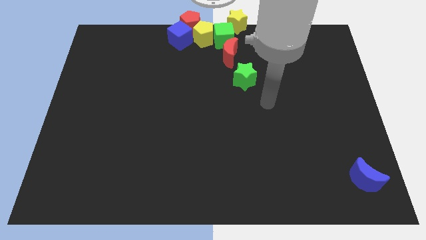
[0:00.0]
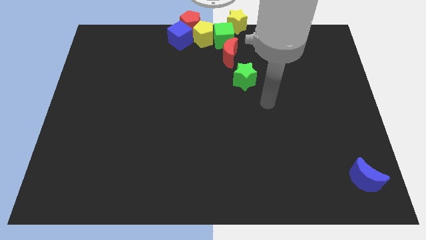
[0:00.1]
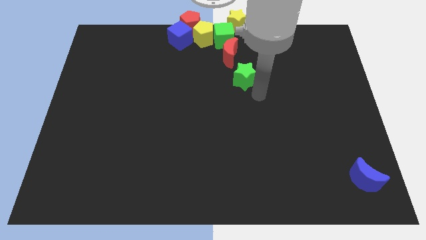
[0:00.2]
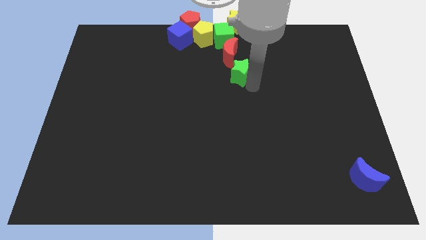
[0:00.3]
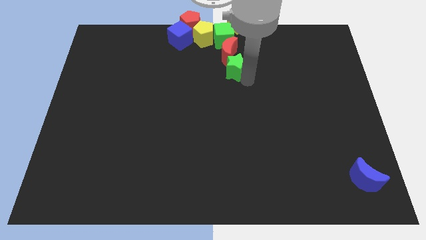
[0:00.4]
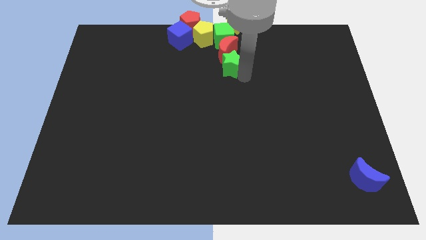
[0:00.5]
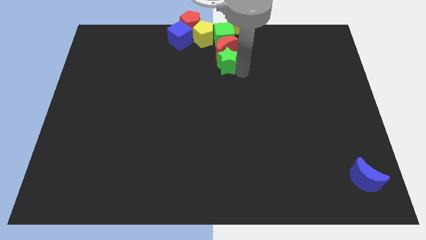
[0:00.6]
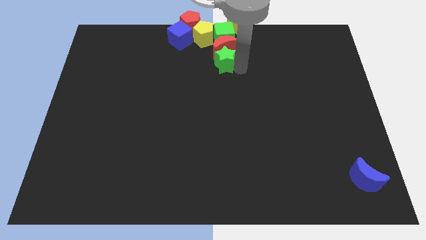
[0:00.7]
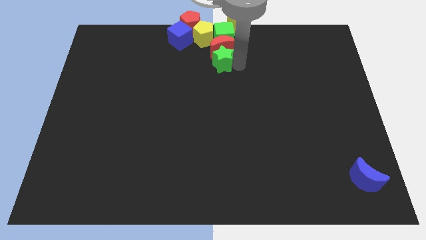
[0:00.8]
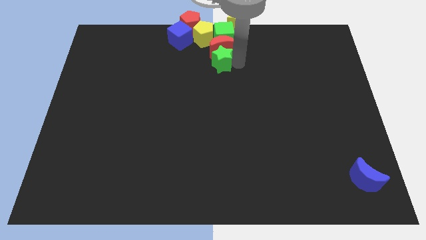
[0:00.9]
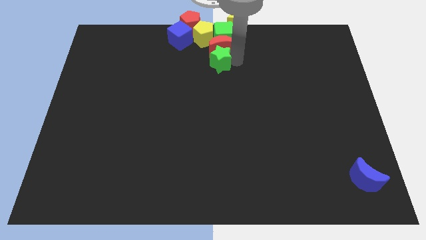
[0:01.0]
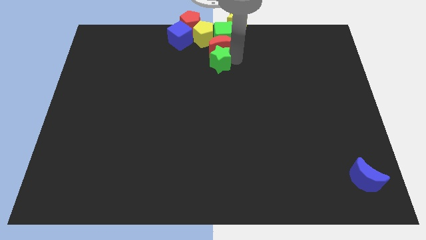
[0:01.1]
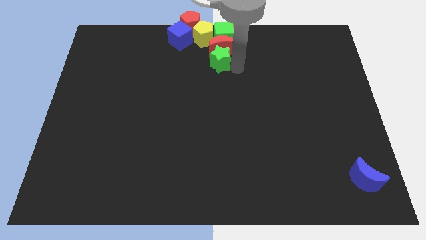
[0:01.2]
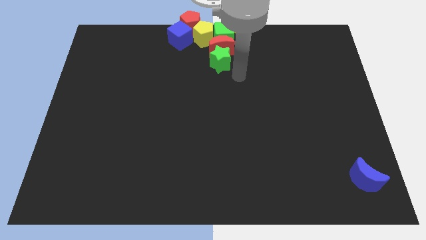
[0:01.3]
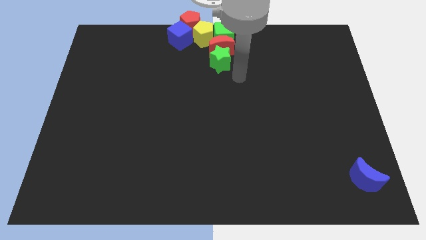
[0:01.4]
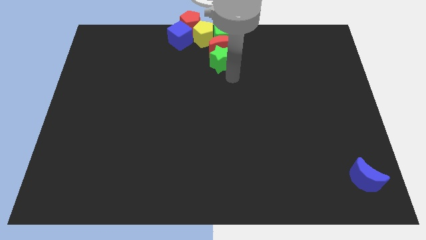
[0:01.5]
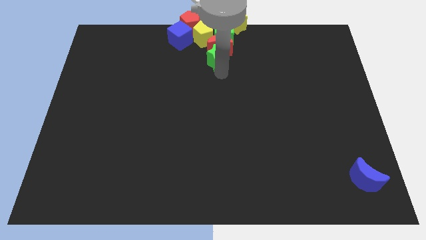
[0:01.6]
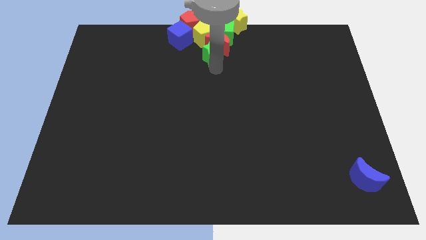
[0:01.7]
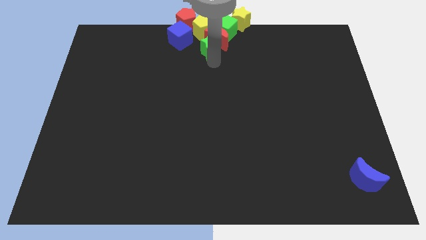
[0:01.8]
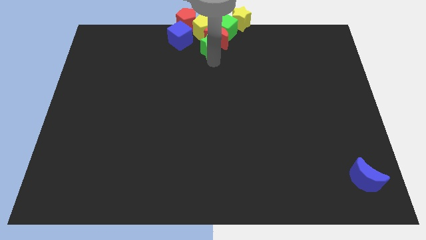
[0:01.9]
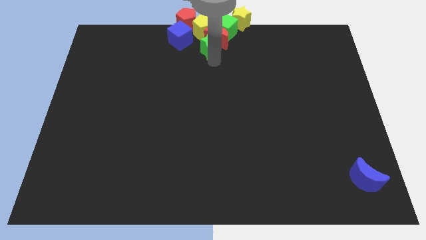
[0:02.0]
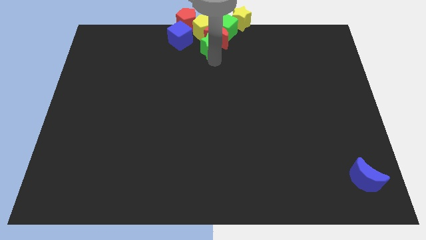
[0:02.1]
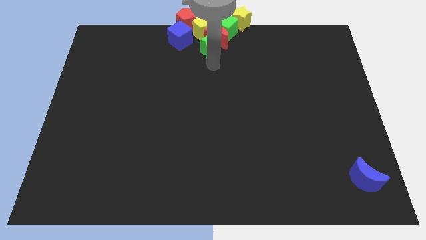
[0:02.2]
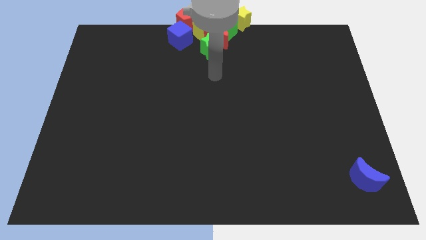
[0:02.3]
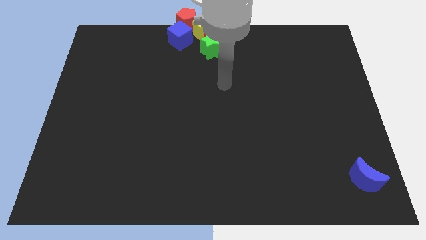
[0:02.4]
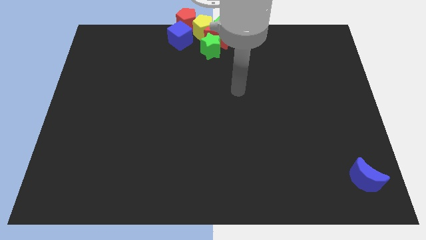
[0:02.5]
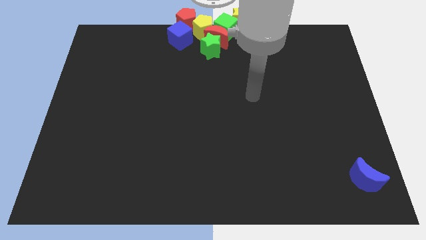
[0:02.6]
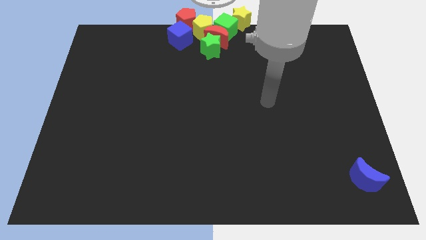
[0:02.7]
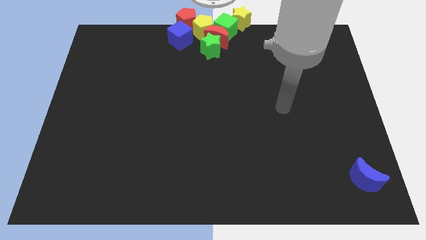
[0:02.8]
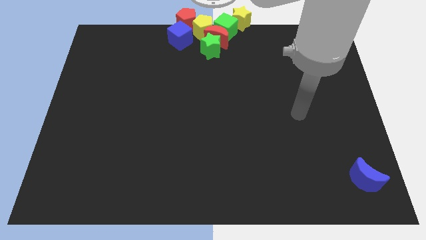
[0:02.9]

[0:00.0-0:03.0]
push the green star into a group of blocks

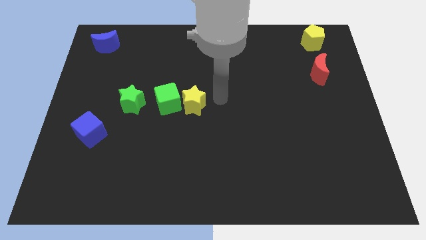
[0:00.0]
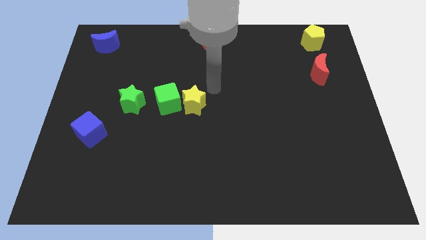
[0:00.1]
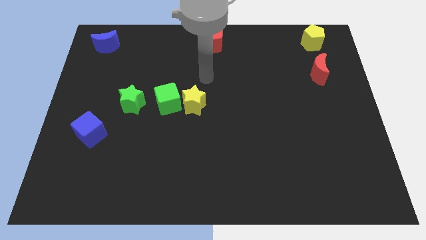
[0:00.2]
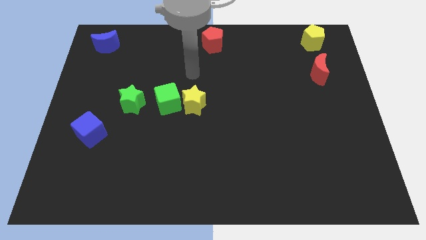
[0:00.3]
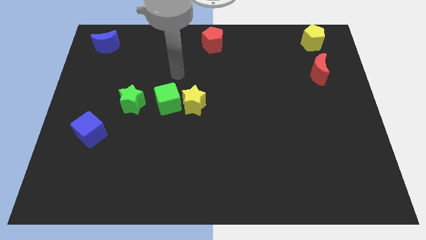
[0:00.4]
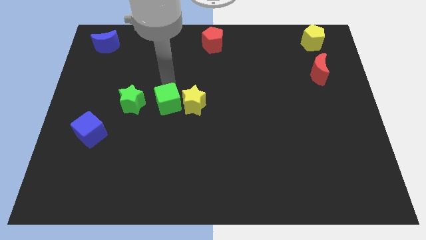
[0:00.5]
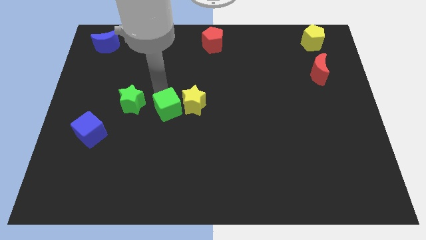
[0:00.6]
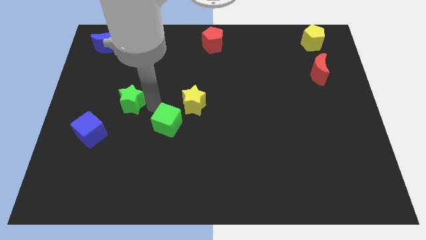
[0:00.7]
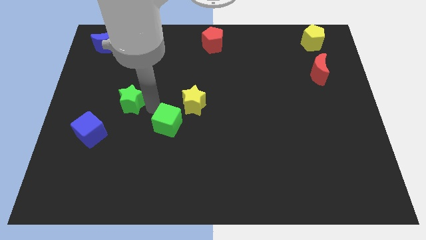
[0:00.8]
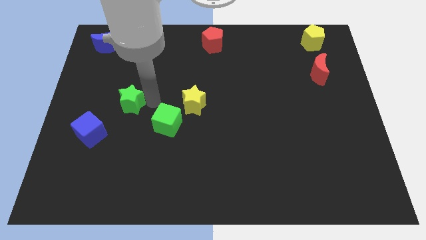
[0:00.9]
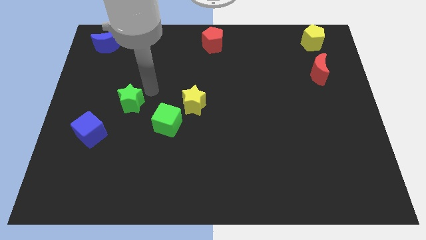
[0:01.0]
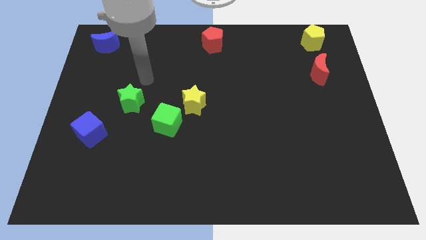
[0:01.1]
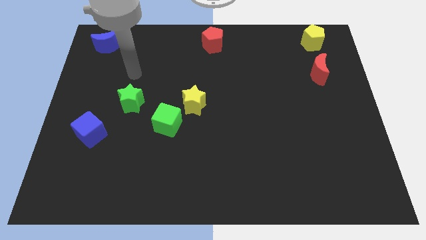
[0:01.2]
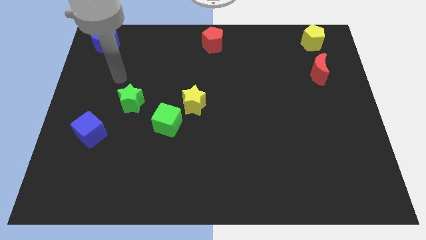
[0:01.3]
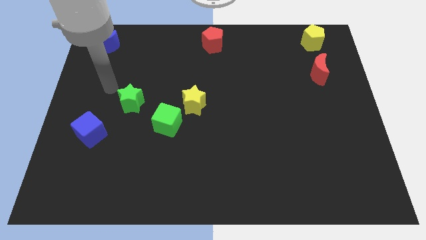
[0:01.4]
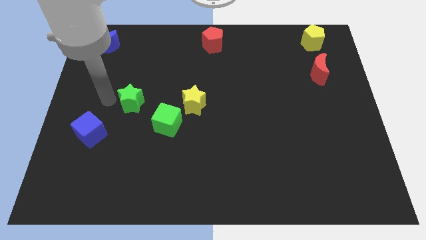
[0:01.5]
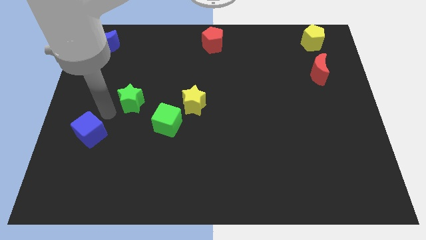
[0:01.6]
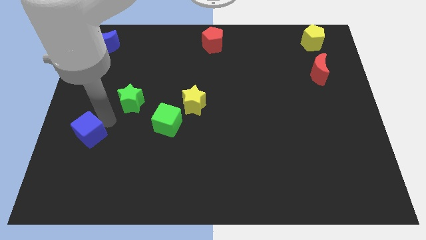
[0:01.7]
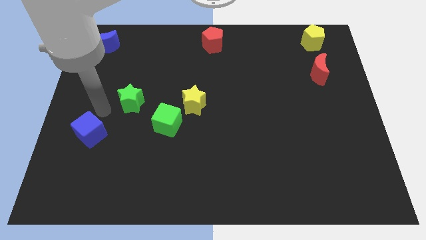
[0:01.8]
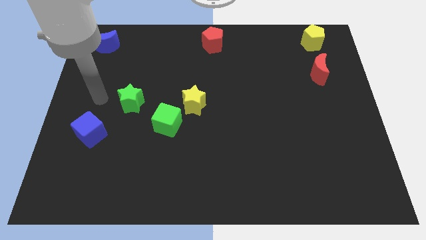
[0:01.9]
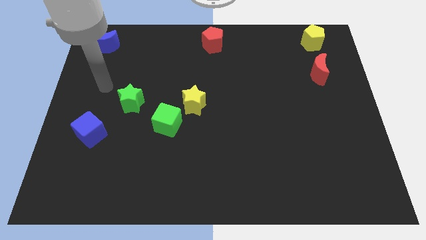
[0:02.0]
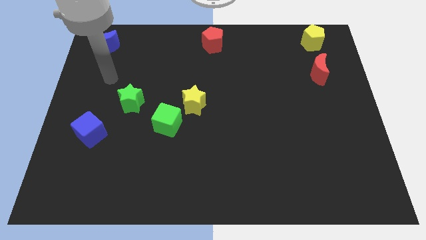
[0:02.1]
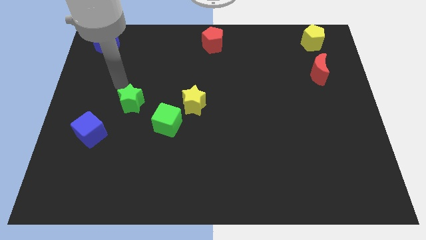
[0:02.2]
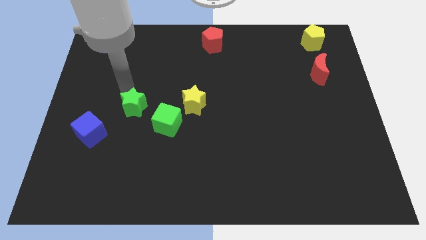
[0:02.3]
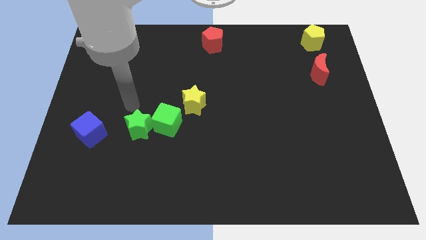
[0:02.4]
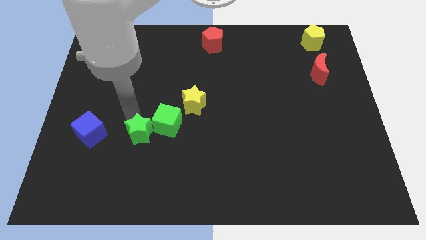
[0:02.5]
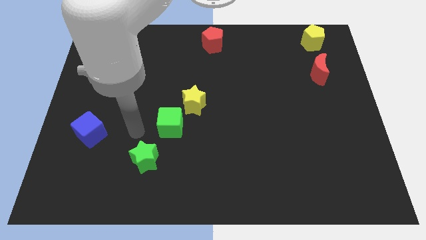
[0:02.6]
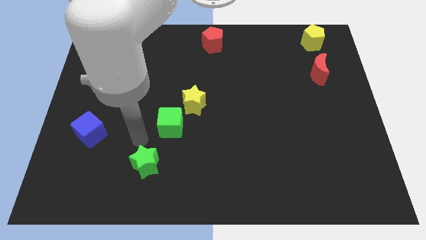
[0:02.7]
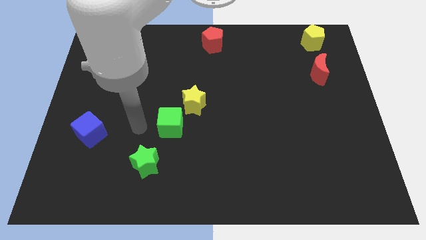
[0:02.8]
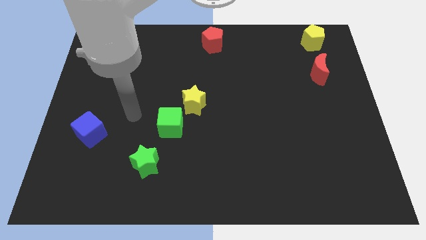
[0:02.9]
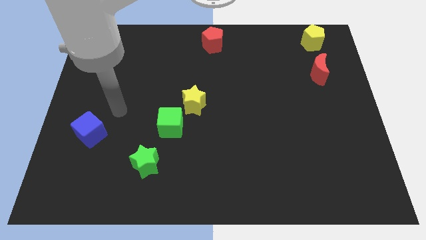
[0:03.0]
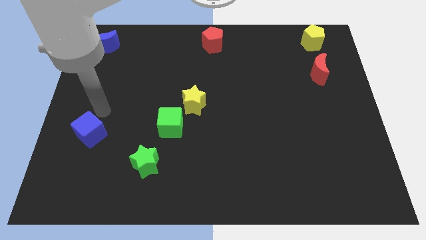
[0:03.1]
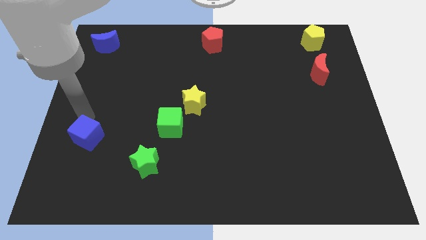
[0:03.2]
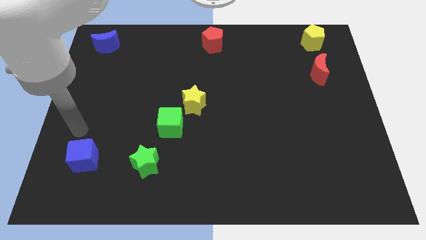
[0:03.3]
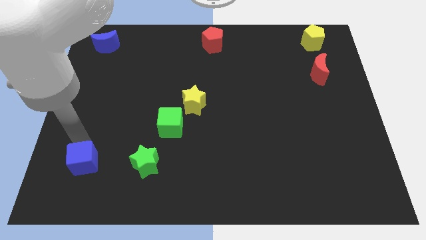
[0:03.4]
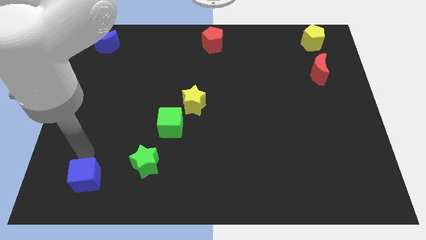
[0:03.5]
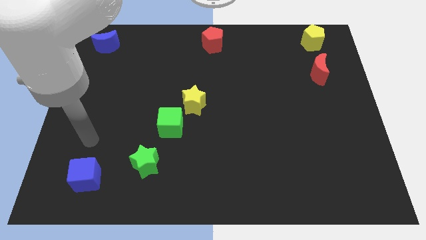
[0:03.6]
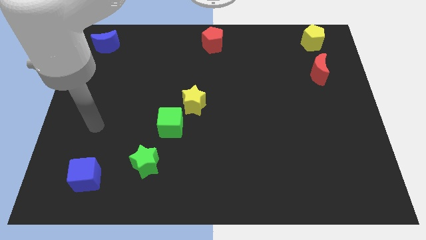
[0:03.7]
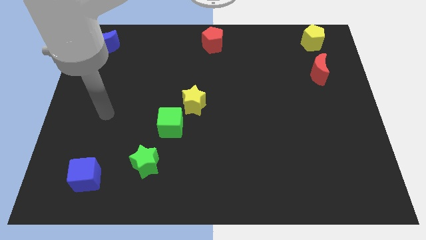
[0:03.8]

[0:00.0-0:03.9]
move the green blocks and blue cube downwards

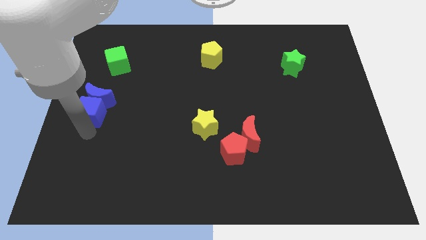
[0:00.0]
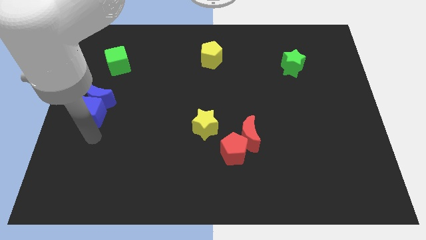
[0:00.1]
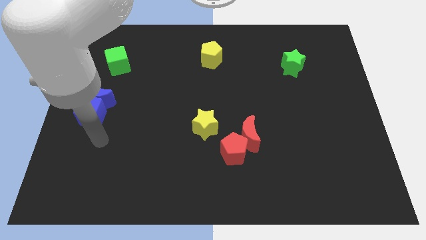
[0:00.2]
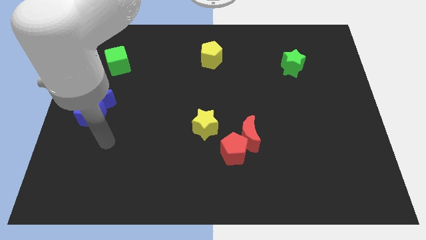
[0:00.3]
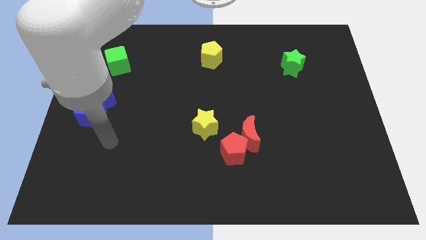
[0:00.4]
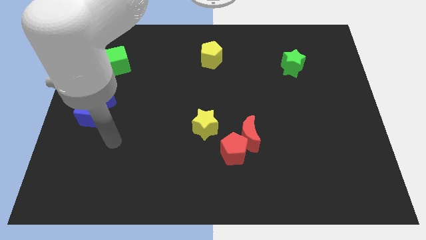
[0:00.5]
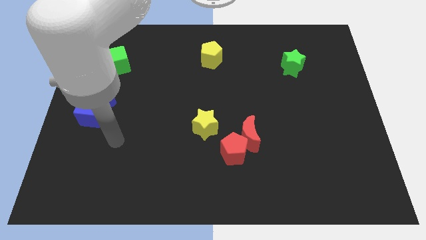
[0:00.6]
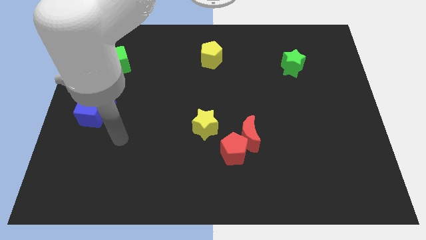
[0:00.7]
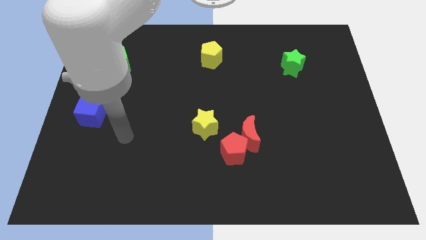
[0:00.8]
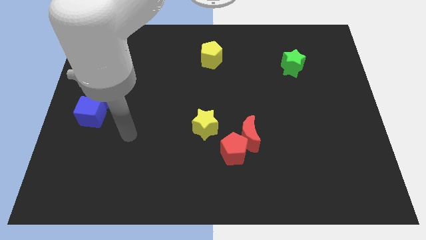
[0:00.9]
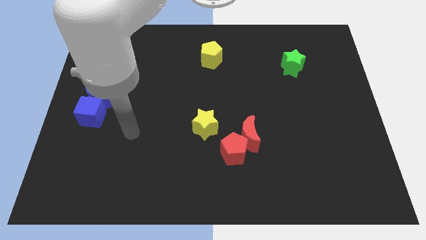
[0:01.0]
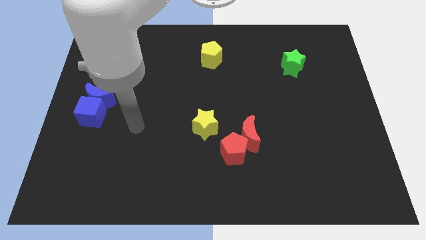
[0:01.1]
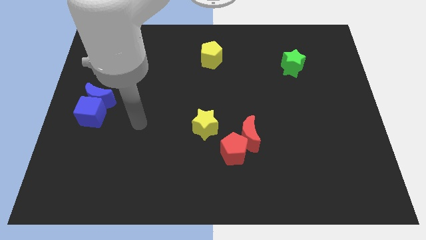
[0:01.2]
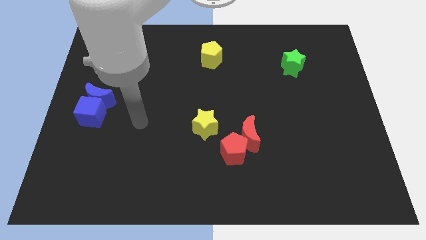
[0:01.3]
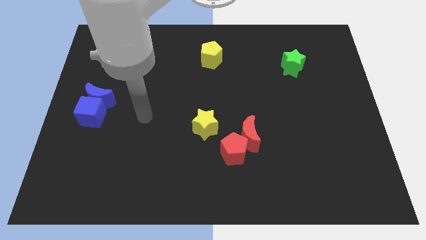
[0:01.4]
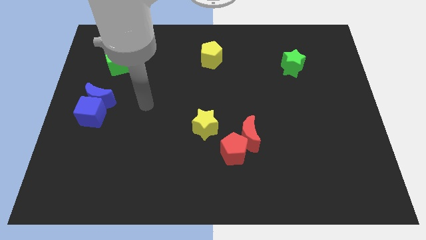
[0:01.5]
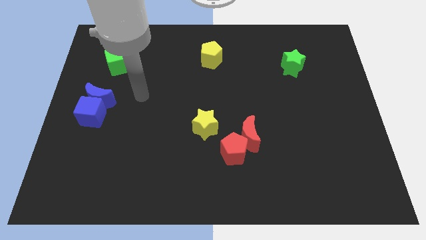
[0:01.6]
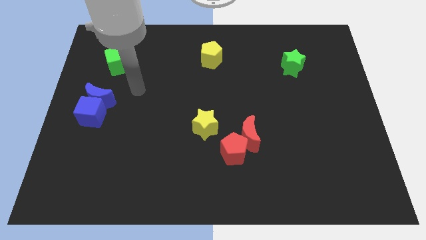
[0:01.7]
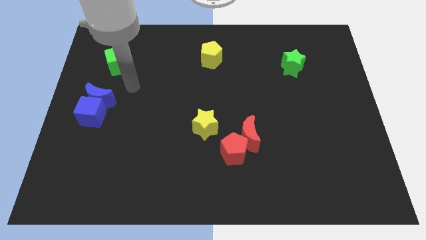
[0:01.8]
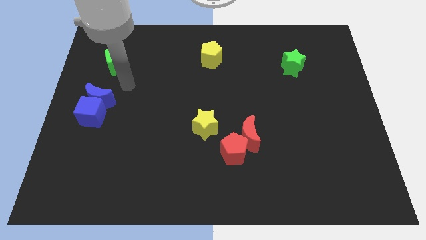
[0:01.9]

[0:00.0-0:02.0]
move the arm away from the blue cube

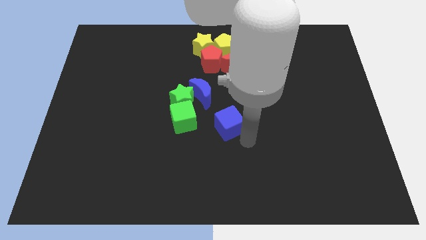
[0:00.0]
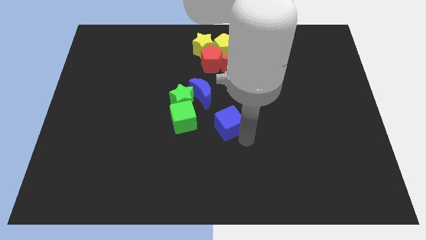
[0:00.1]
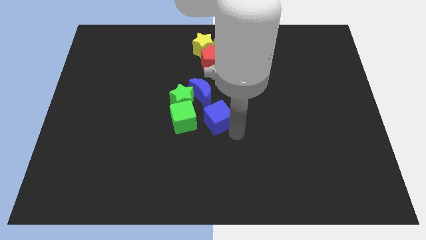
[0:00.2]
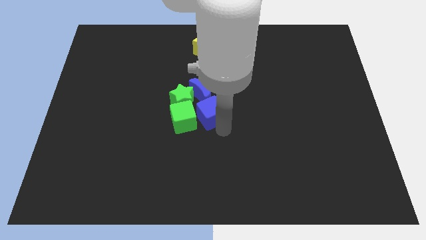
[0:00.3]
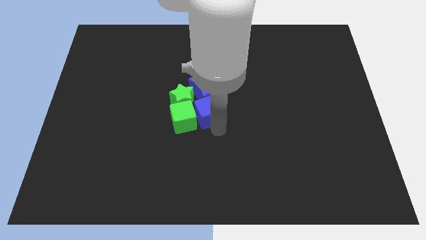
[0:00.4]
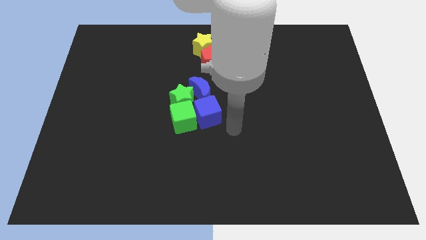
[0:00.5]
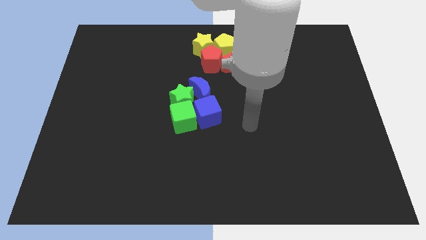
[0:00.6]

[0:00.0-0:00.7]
move the blue cube to the right side of the green cube on the board
